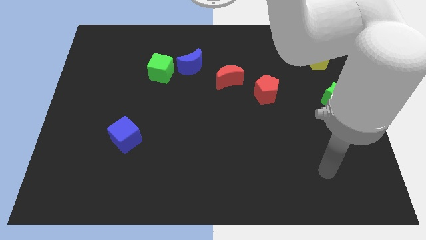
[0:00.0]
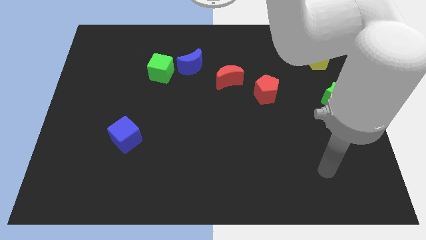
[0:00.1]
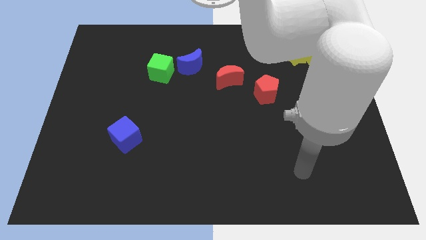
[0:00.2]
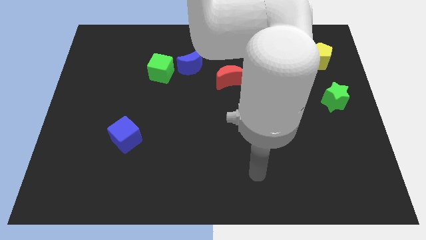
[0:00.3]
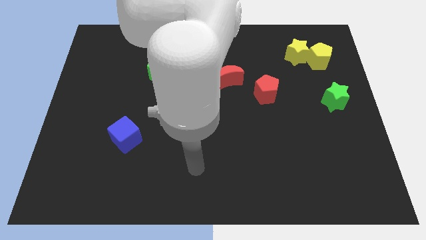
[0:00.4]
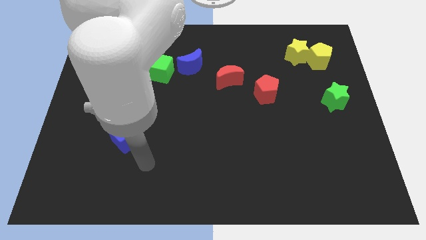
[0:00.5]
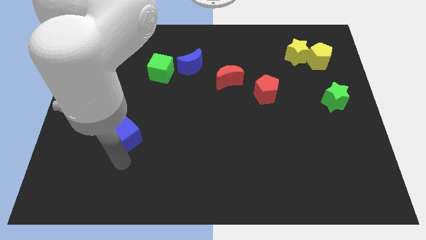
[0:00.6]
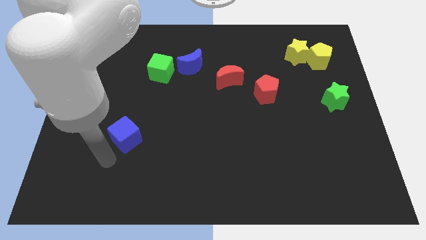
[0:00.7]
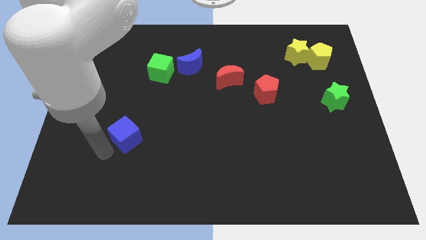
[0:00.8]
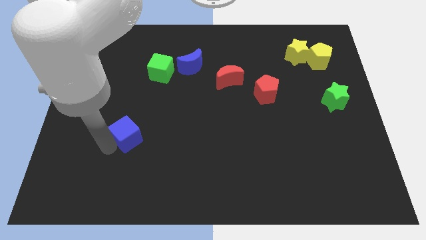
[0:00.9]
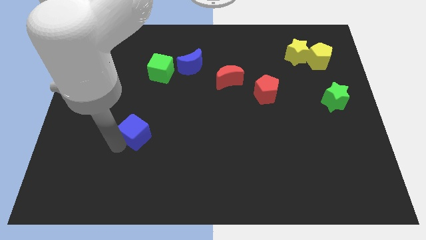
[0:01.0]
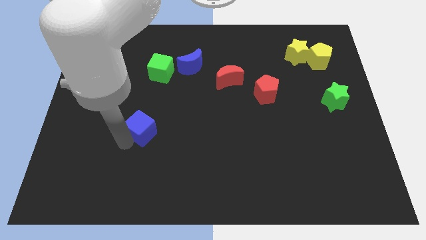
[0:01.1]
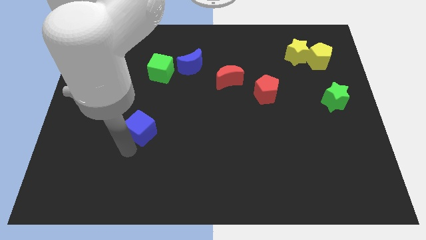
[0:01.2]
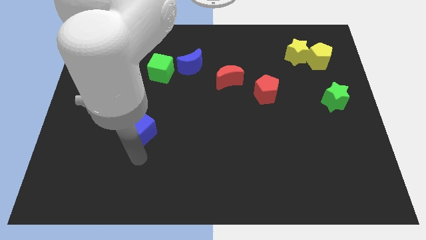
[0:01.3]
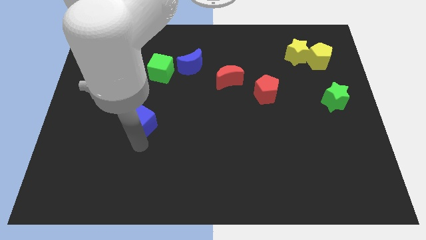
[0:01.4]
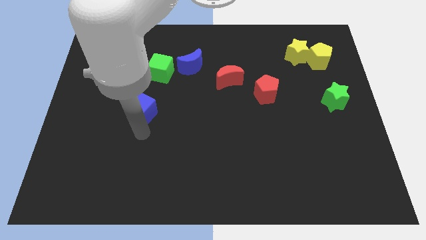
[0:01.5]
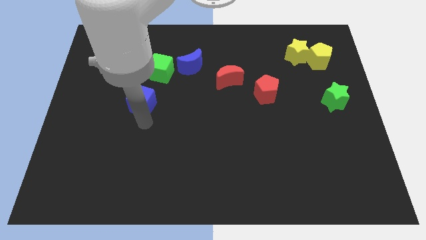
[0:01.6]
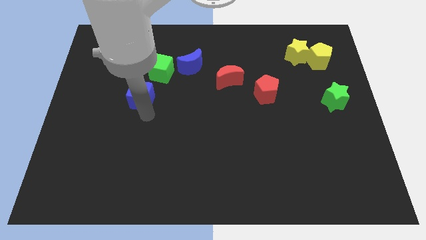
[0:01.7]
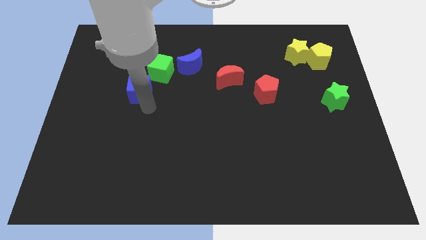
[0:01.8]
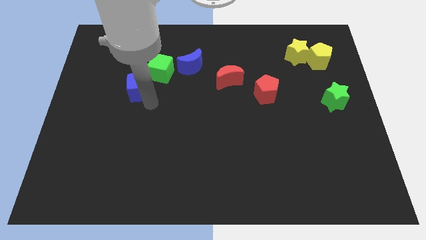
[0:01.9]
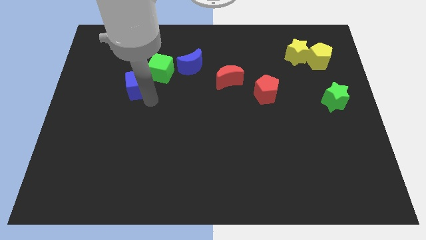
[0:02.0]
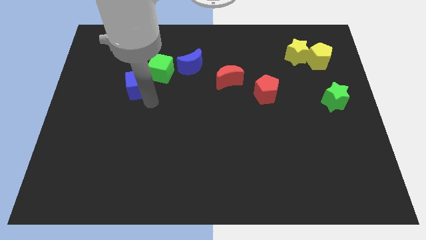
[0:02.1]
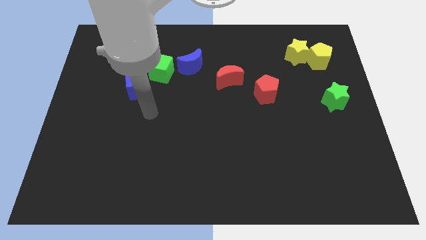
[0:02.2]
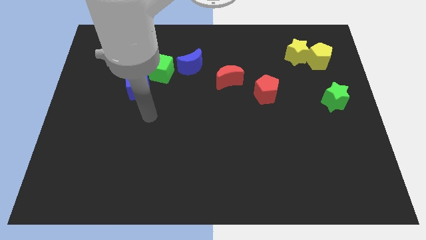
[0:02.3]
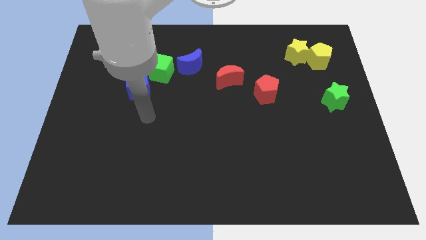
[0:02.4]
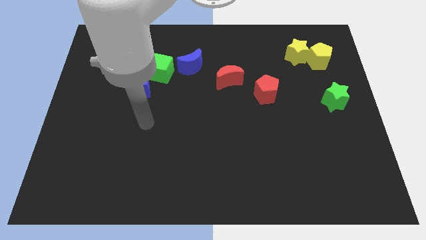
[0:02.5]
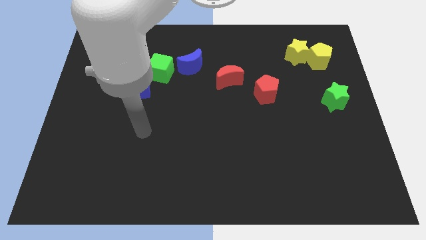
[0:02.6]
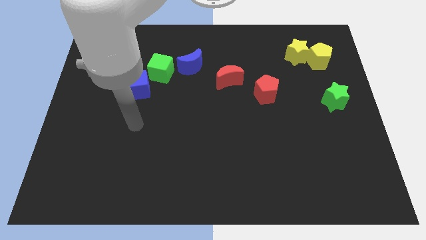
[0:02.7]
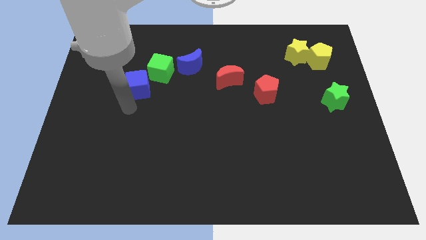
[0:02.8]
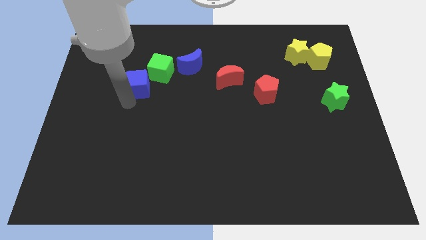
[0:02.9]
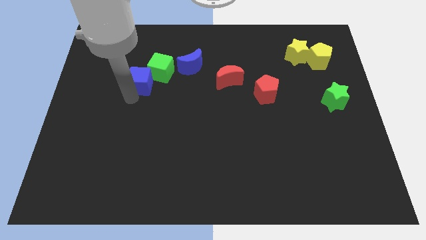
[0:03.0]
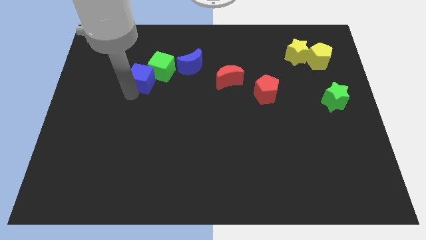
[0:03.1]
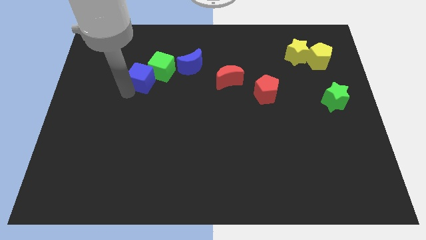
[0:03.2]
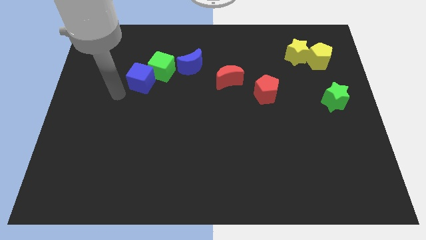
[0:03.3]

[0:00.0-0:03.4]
move the blue cube close to the green cube

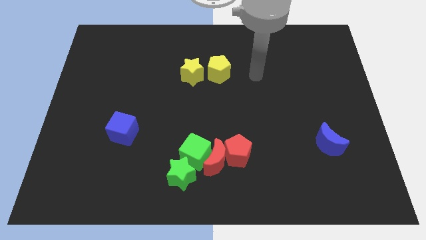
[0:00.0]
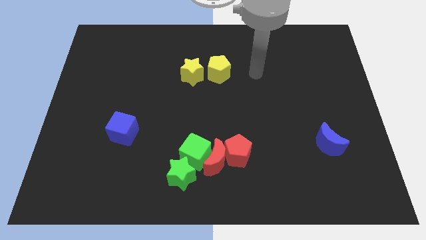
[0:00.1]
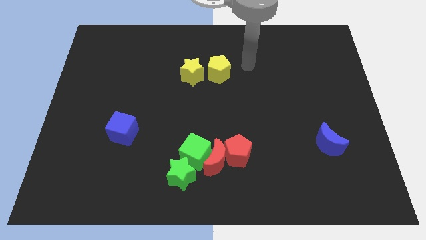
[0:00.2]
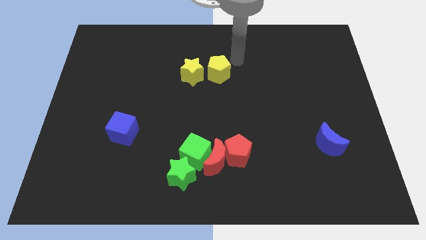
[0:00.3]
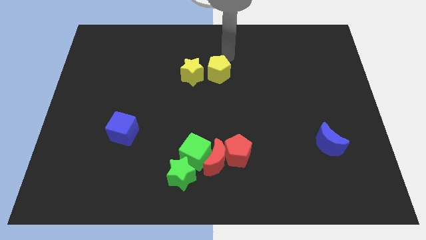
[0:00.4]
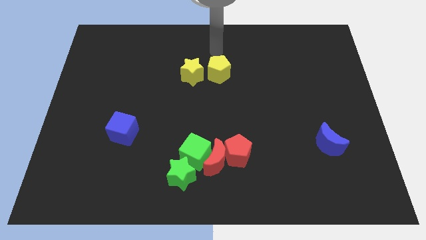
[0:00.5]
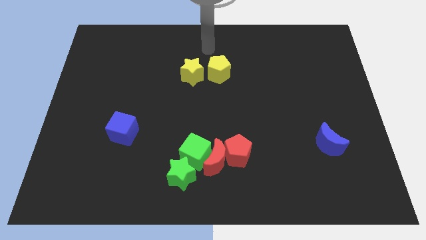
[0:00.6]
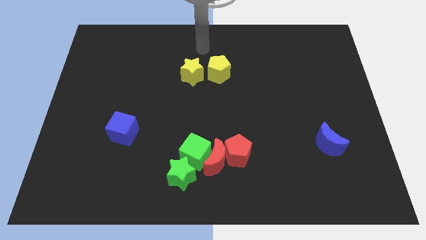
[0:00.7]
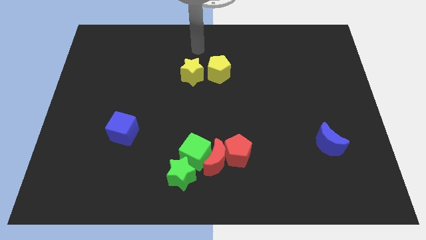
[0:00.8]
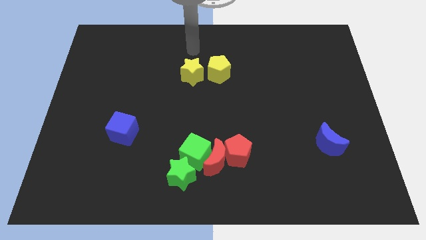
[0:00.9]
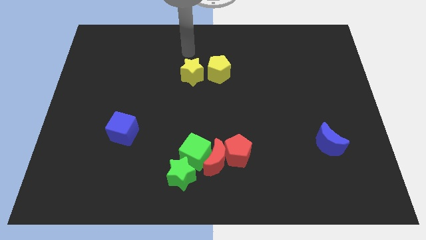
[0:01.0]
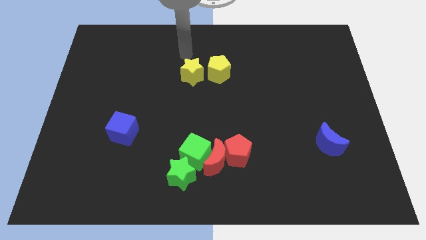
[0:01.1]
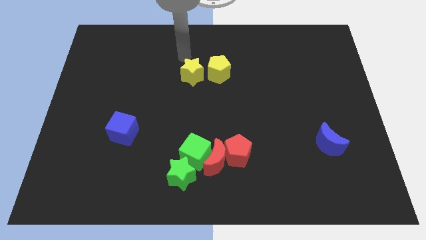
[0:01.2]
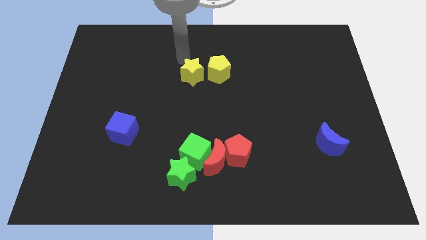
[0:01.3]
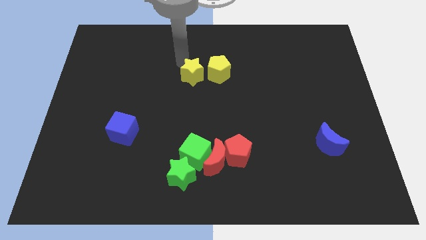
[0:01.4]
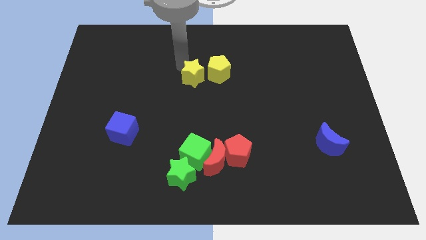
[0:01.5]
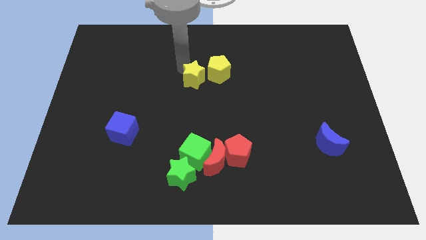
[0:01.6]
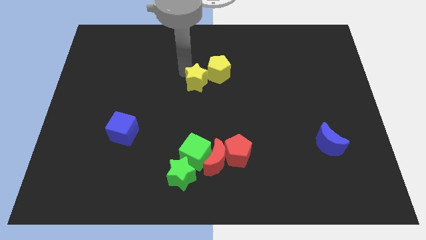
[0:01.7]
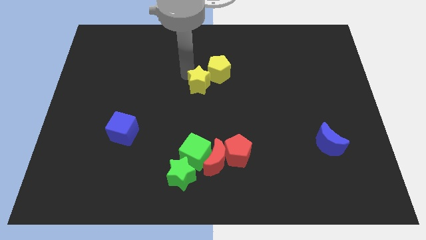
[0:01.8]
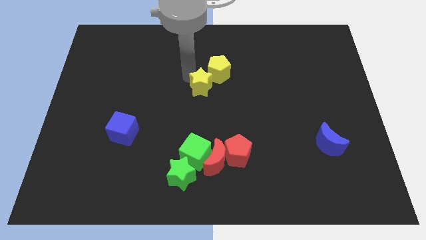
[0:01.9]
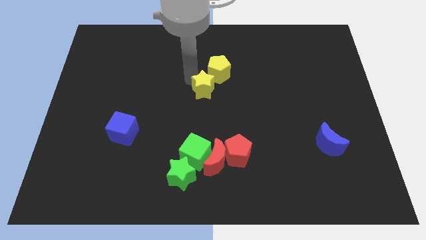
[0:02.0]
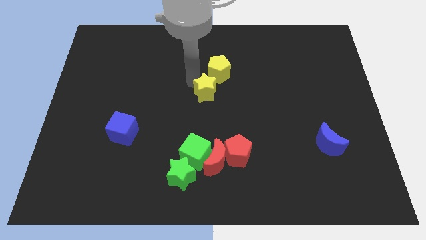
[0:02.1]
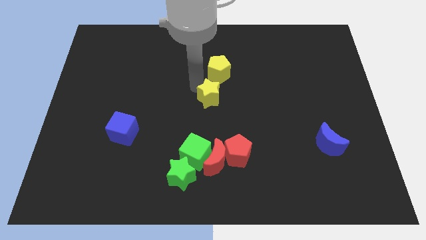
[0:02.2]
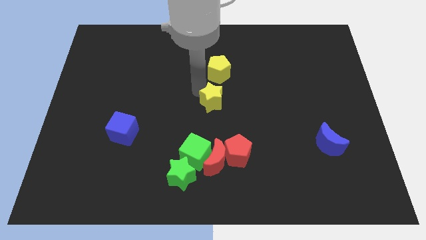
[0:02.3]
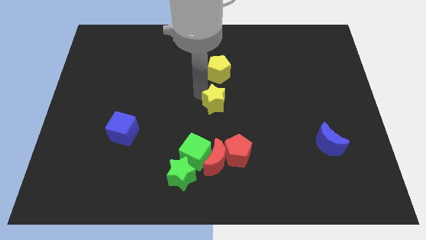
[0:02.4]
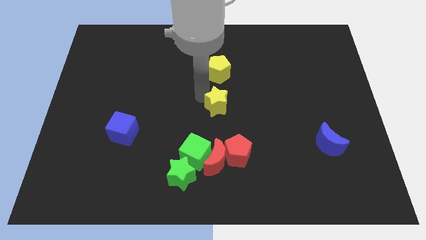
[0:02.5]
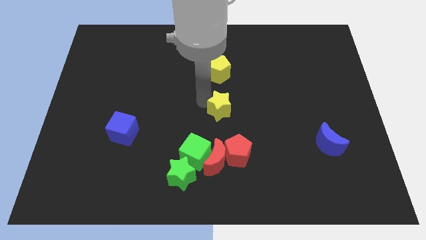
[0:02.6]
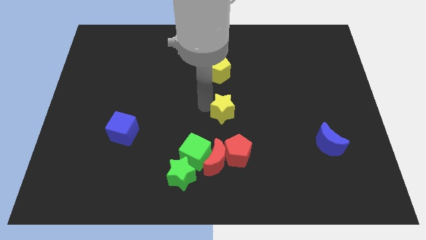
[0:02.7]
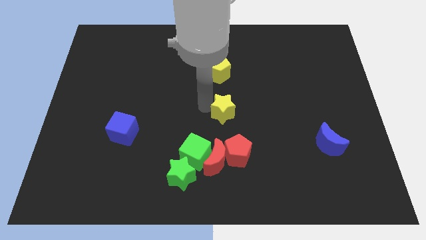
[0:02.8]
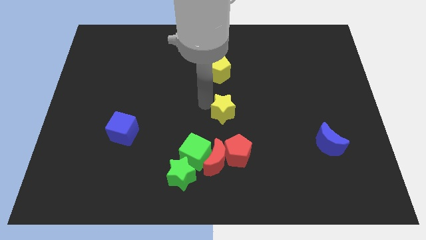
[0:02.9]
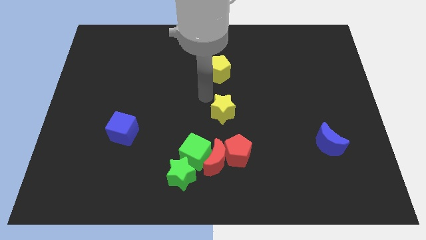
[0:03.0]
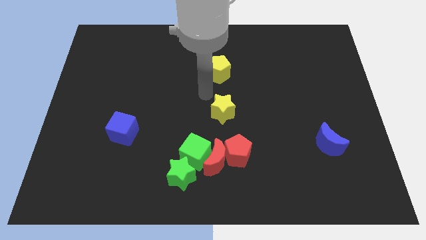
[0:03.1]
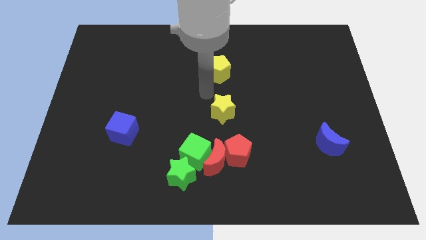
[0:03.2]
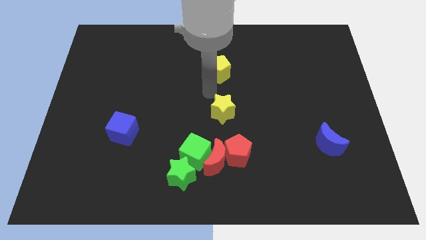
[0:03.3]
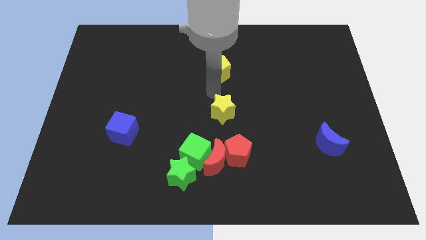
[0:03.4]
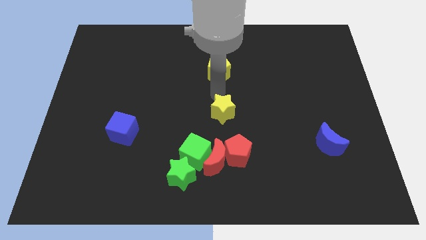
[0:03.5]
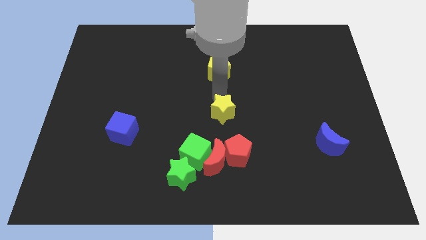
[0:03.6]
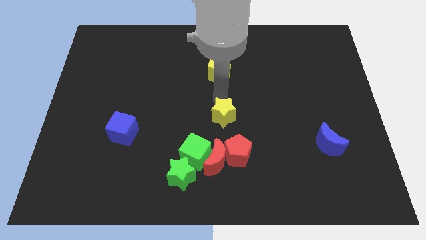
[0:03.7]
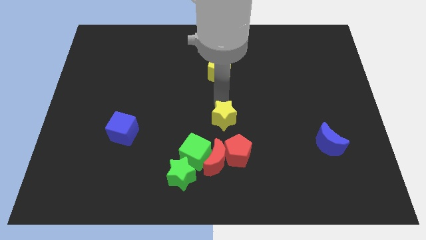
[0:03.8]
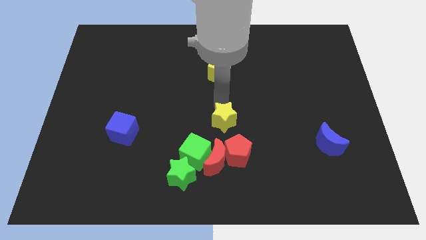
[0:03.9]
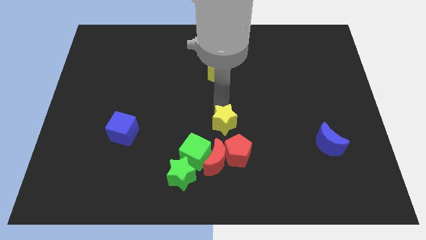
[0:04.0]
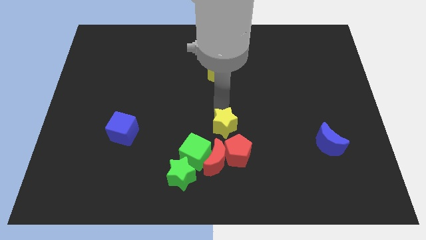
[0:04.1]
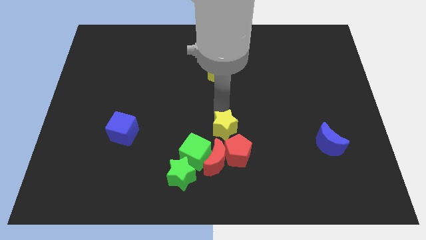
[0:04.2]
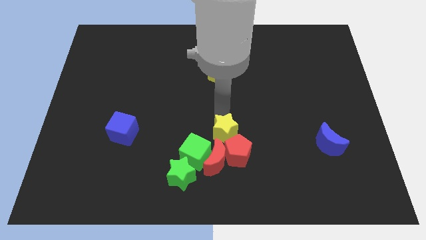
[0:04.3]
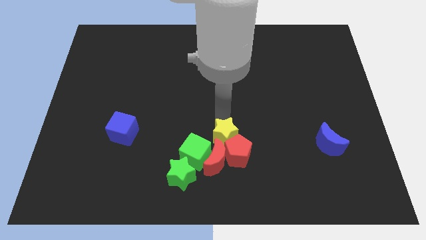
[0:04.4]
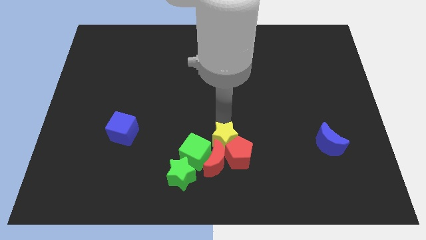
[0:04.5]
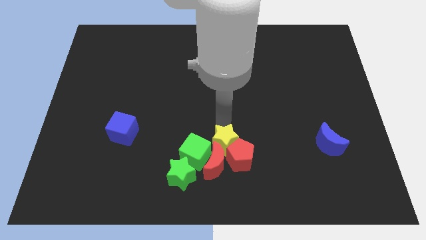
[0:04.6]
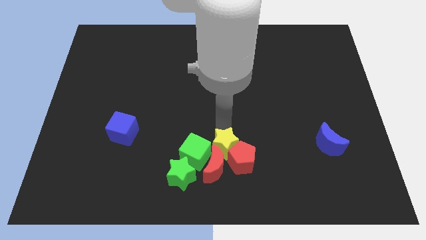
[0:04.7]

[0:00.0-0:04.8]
put the yellow star close to the red moon
